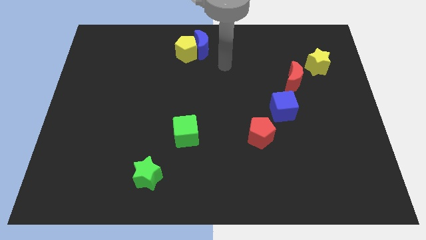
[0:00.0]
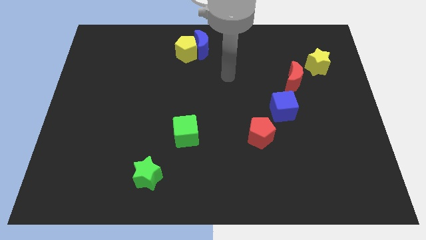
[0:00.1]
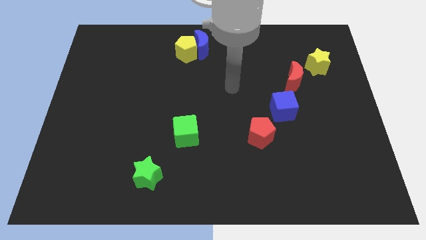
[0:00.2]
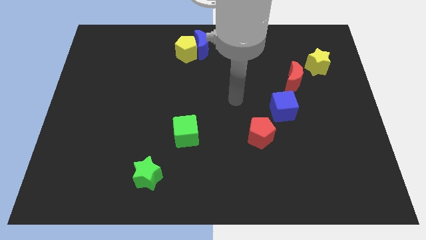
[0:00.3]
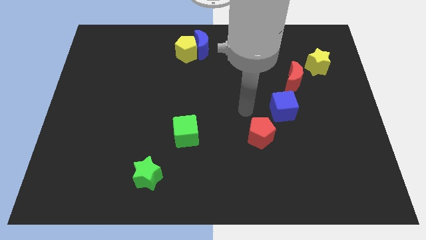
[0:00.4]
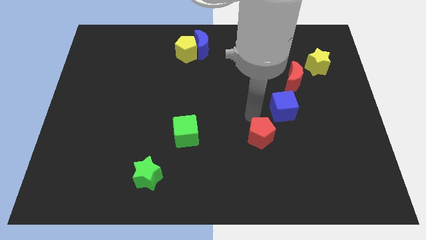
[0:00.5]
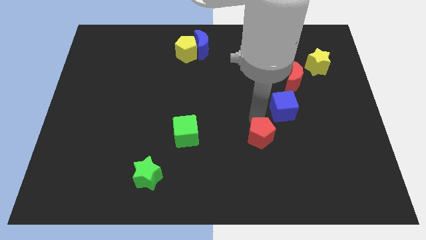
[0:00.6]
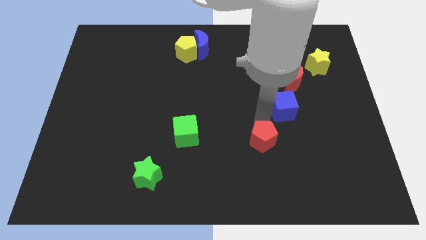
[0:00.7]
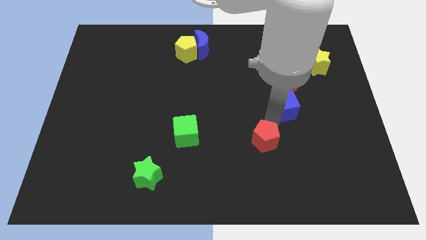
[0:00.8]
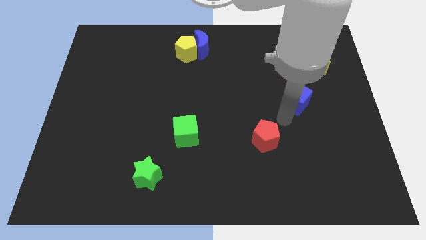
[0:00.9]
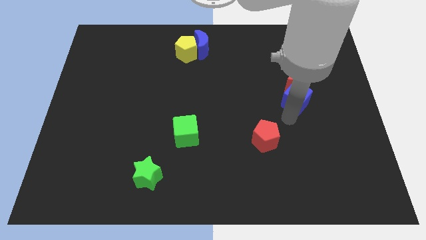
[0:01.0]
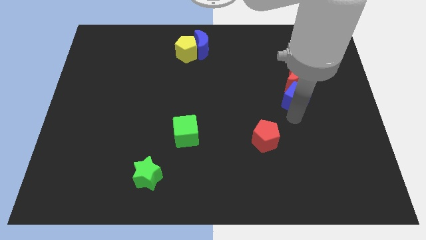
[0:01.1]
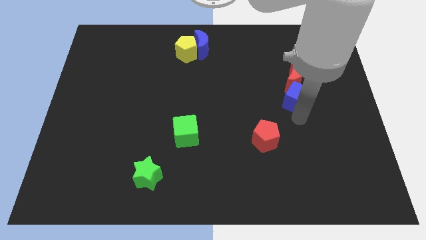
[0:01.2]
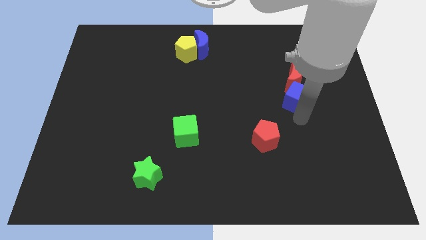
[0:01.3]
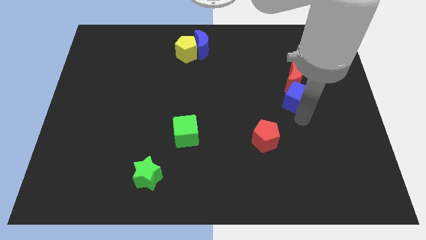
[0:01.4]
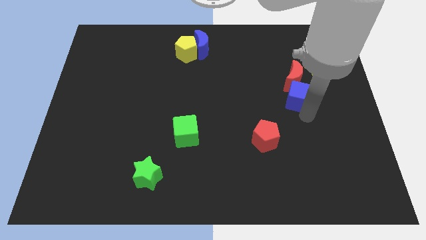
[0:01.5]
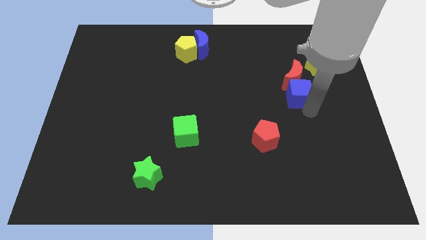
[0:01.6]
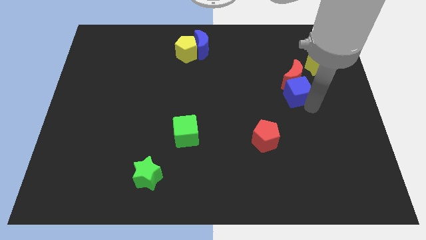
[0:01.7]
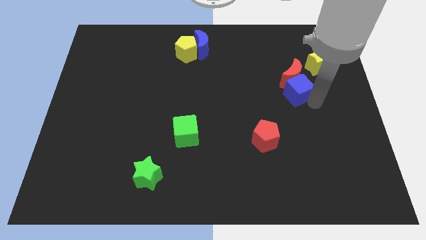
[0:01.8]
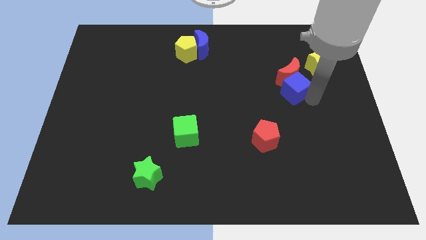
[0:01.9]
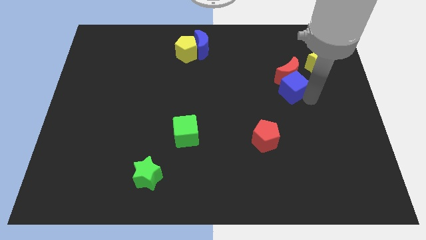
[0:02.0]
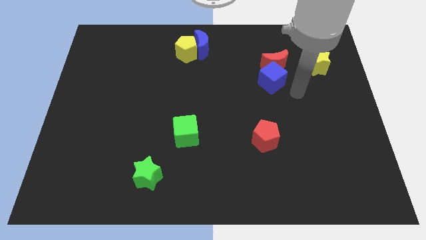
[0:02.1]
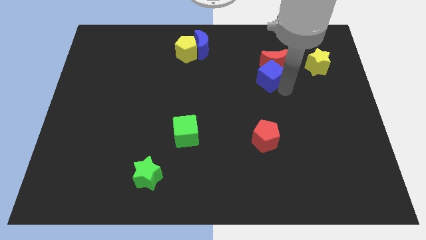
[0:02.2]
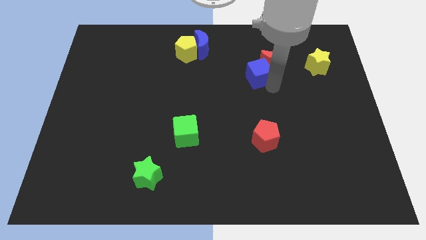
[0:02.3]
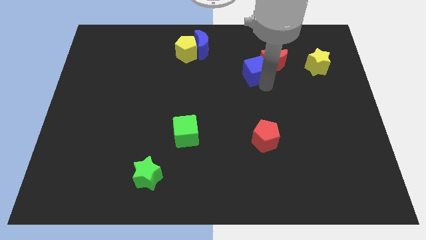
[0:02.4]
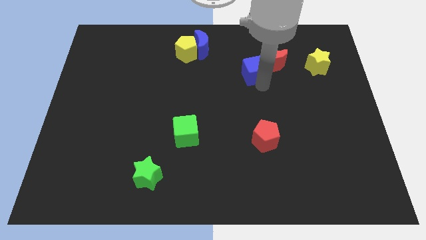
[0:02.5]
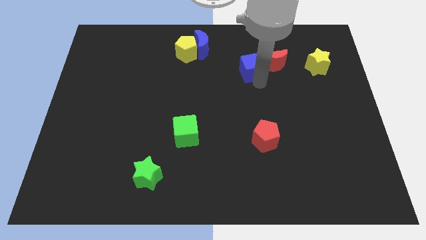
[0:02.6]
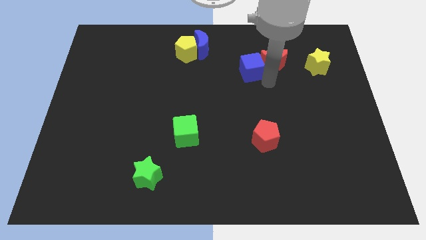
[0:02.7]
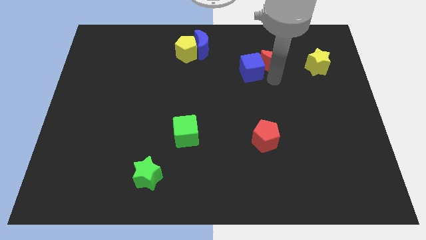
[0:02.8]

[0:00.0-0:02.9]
place the blue cube to the left side of the red crescent

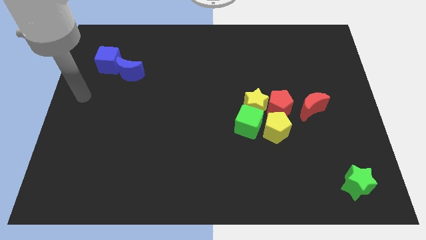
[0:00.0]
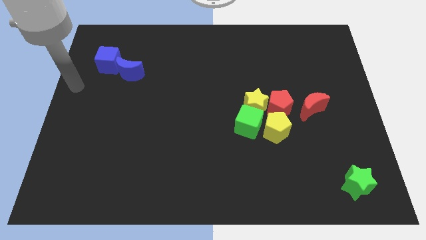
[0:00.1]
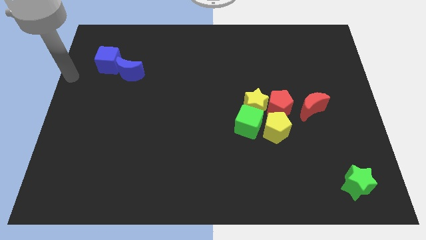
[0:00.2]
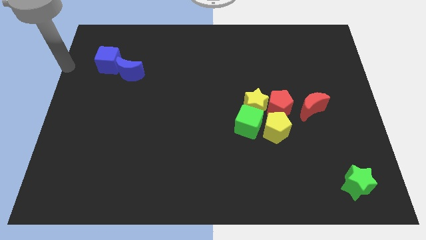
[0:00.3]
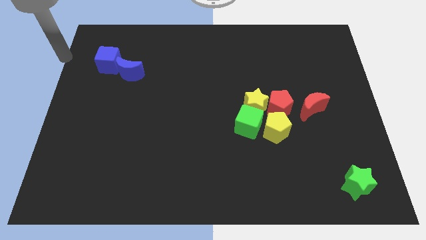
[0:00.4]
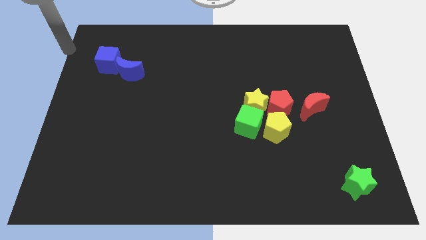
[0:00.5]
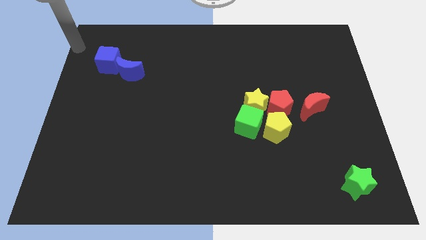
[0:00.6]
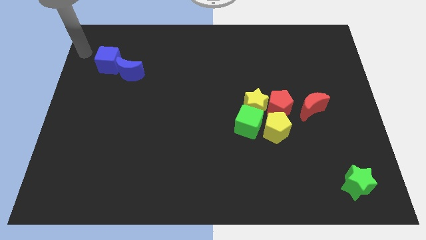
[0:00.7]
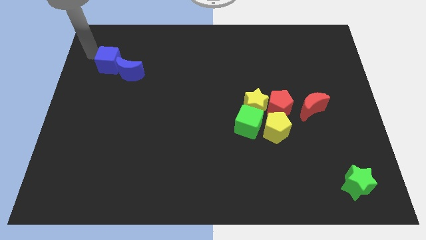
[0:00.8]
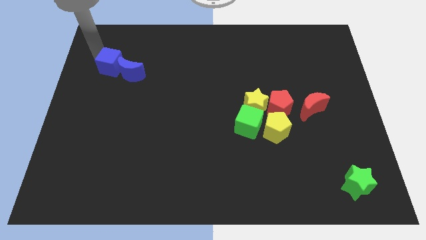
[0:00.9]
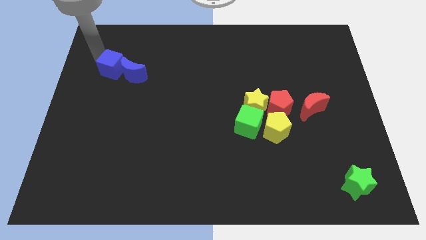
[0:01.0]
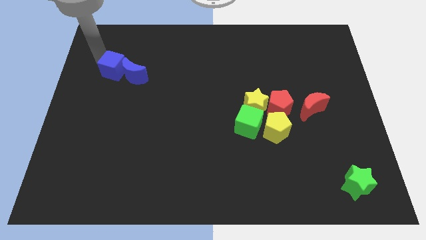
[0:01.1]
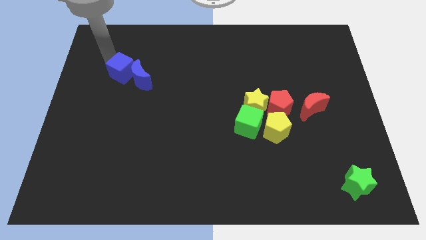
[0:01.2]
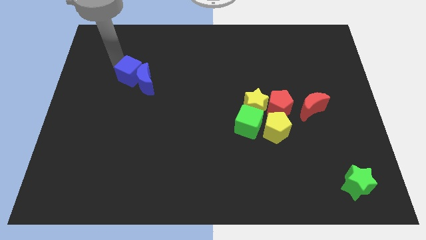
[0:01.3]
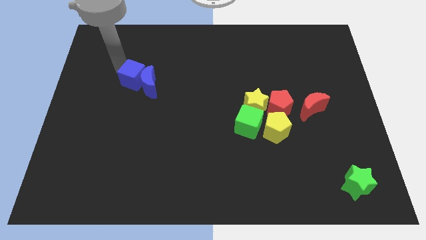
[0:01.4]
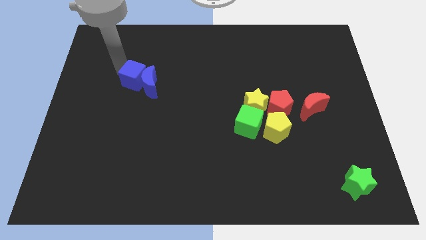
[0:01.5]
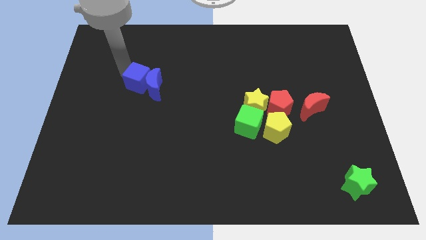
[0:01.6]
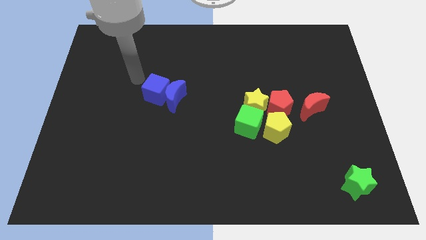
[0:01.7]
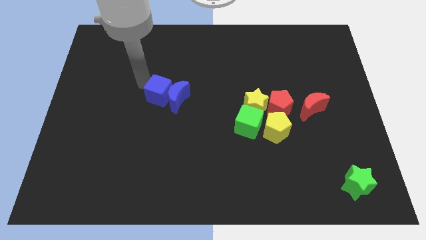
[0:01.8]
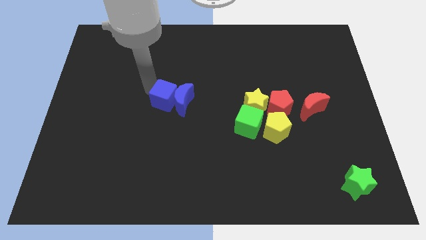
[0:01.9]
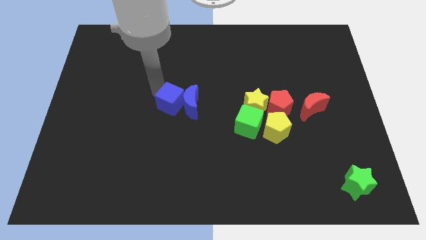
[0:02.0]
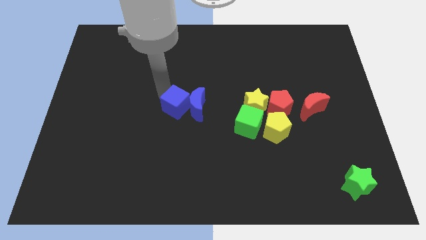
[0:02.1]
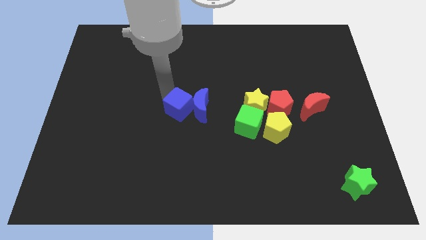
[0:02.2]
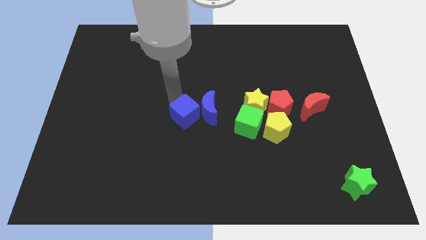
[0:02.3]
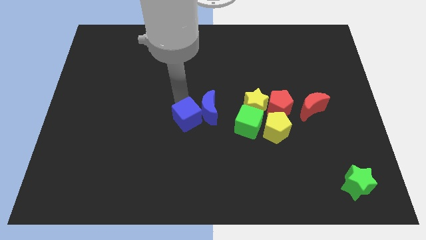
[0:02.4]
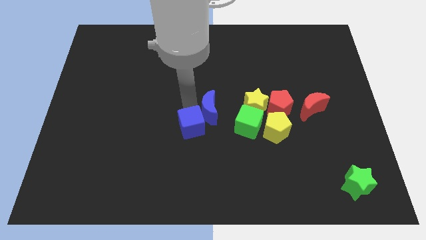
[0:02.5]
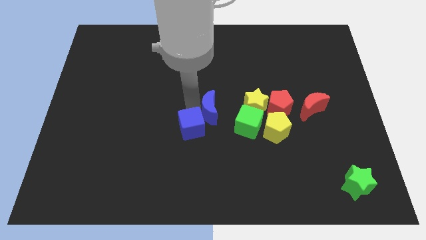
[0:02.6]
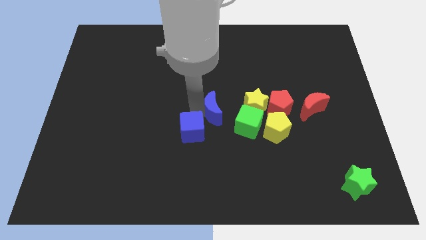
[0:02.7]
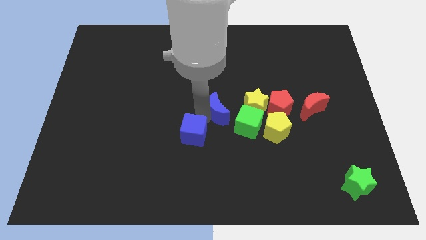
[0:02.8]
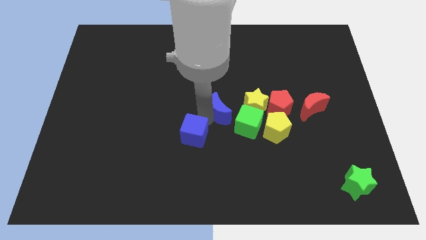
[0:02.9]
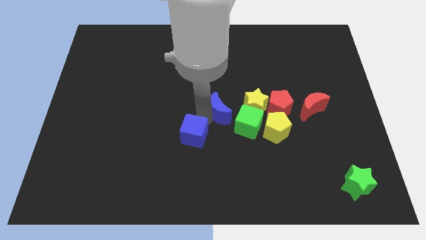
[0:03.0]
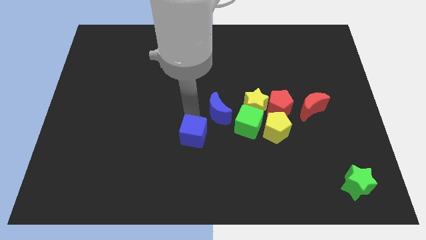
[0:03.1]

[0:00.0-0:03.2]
separate the blue cube from the blue crescent

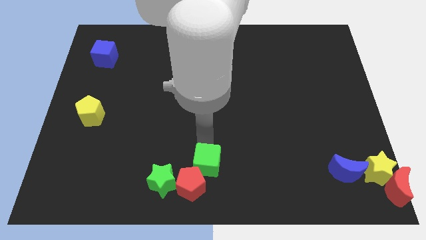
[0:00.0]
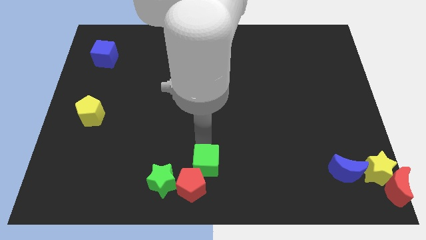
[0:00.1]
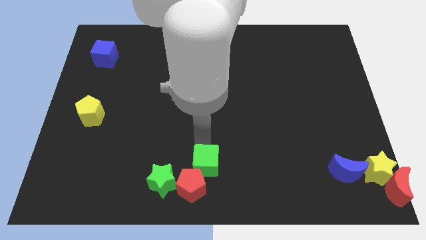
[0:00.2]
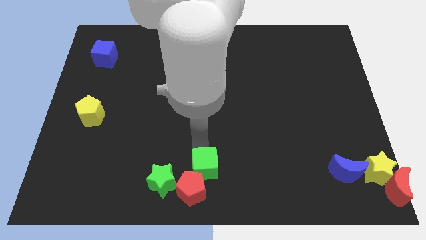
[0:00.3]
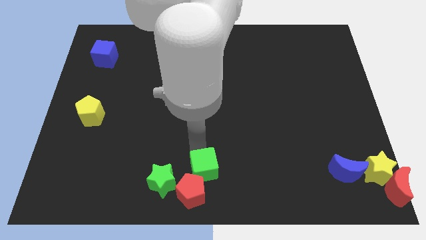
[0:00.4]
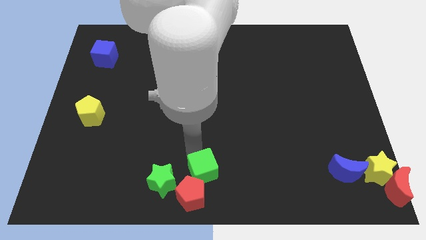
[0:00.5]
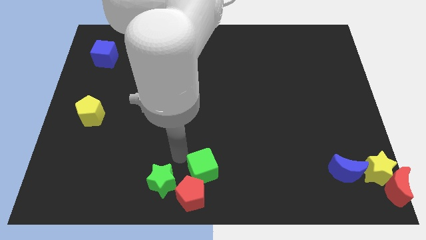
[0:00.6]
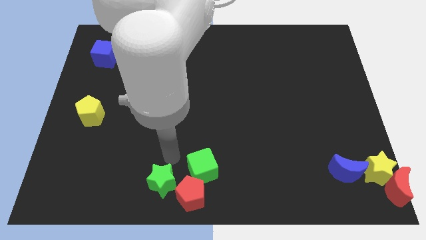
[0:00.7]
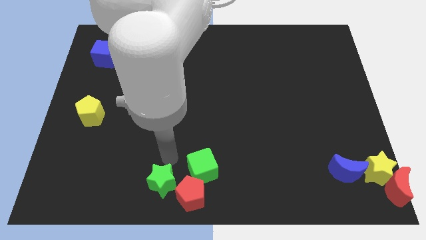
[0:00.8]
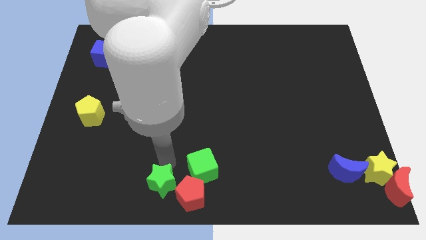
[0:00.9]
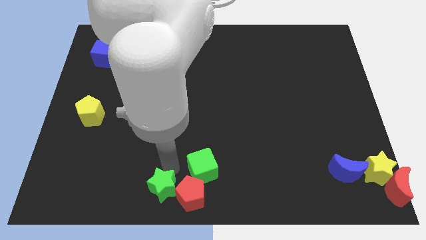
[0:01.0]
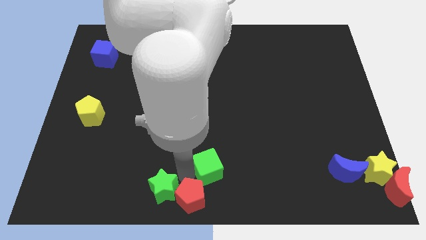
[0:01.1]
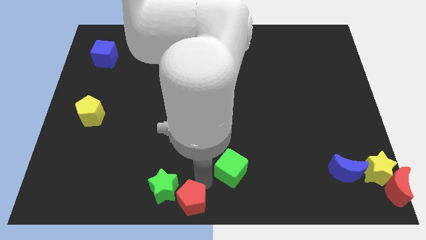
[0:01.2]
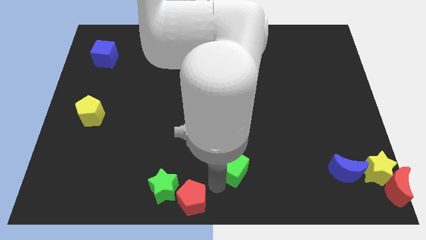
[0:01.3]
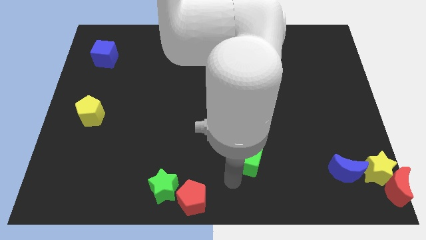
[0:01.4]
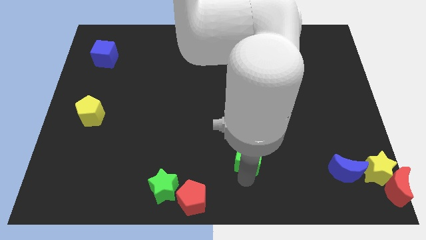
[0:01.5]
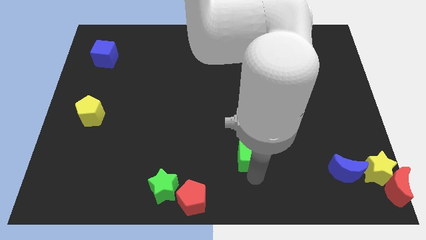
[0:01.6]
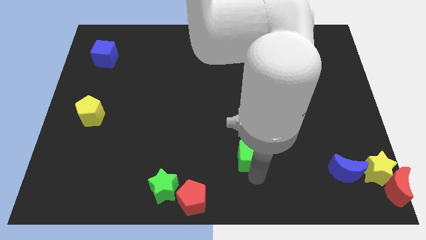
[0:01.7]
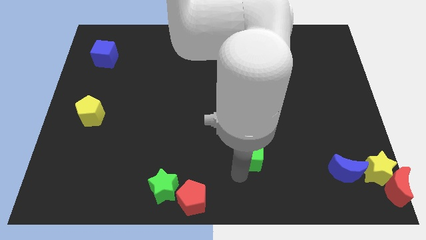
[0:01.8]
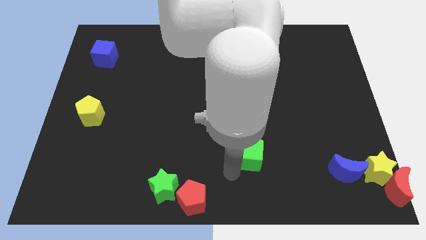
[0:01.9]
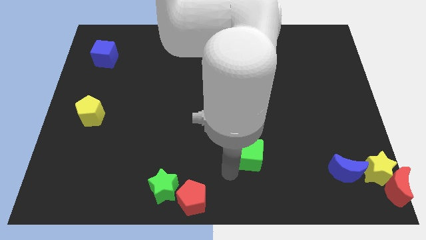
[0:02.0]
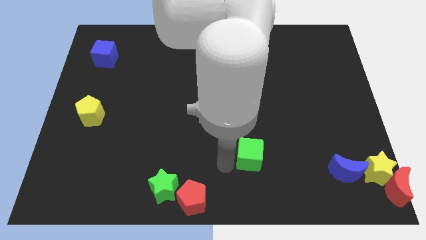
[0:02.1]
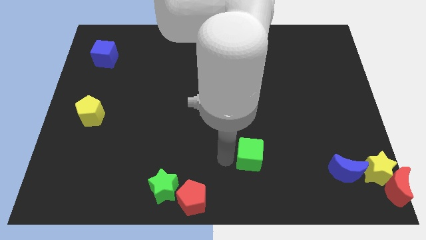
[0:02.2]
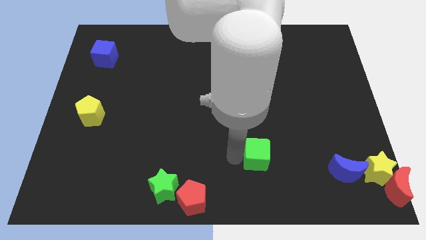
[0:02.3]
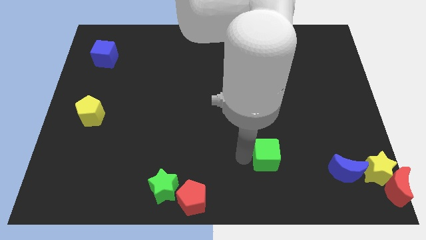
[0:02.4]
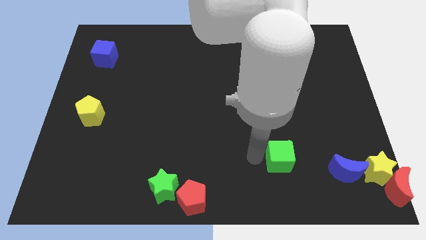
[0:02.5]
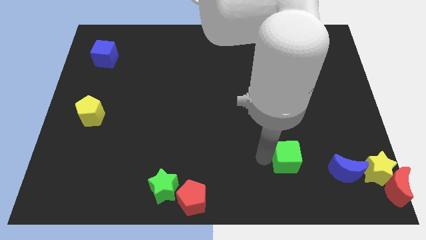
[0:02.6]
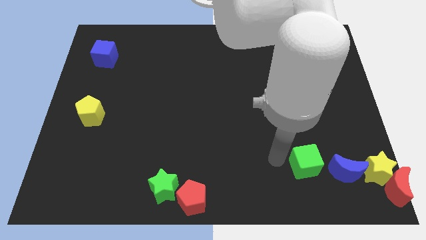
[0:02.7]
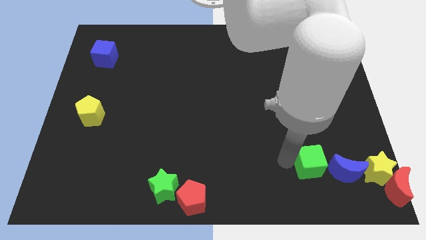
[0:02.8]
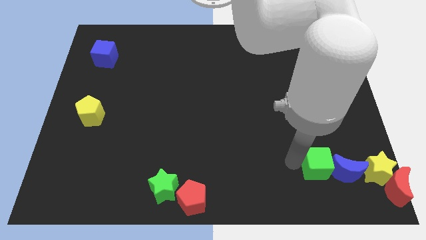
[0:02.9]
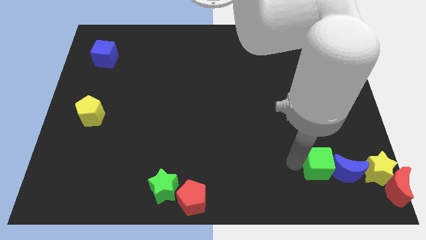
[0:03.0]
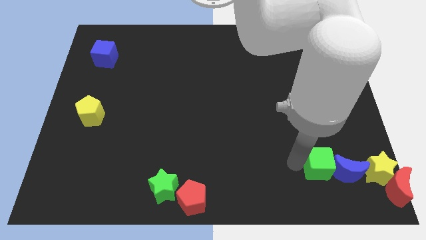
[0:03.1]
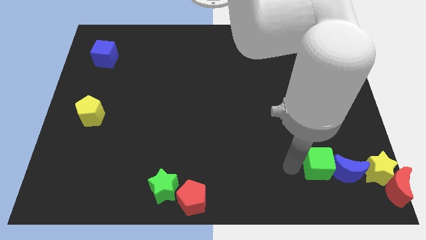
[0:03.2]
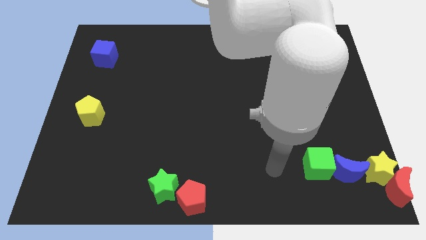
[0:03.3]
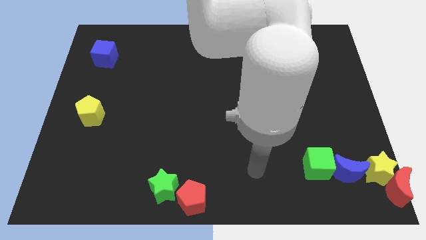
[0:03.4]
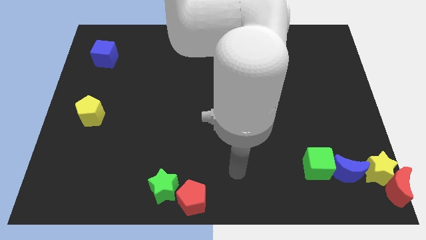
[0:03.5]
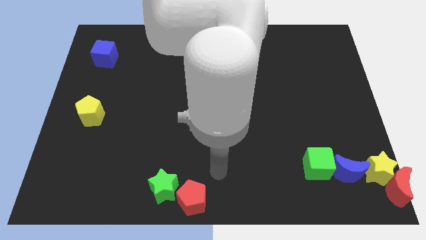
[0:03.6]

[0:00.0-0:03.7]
move green cube into the blue moon
